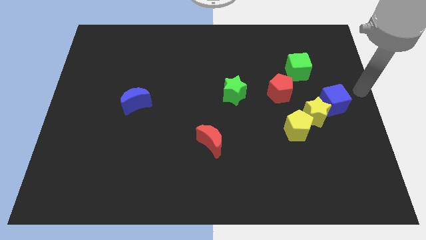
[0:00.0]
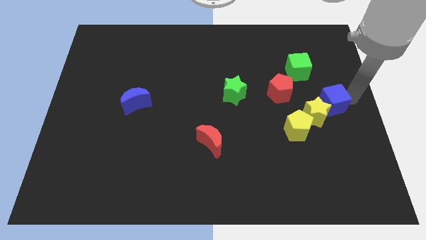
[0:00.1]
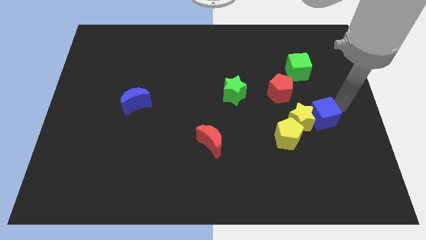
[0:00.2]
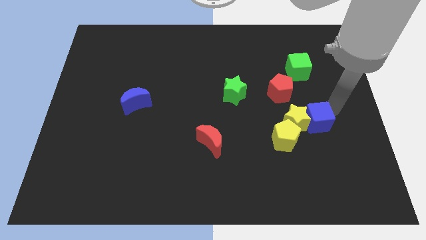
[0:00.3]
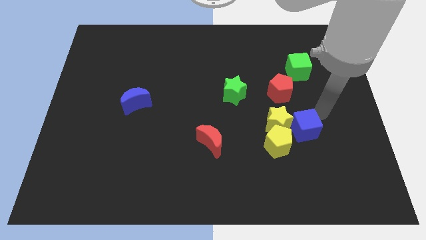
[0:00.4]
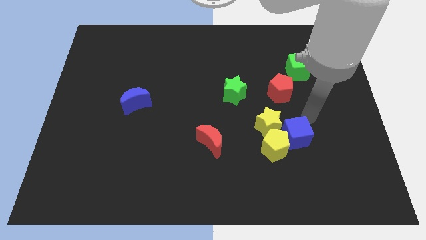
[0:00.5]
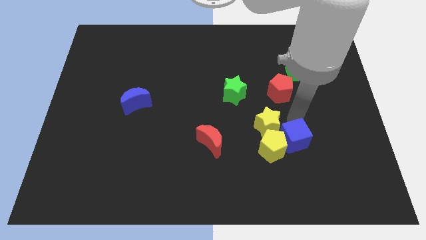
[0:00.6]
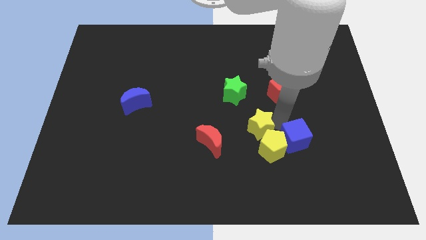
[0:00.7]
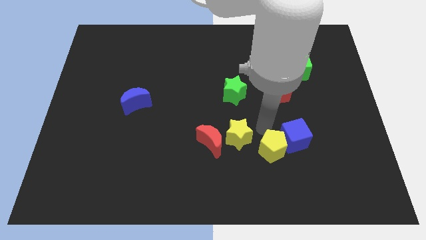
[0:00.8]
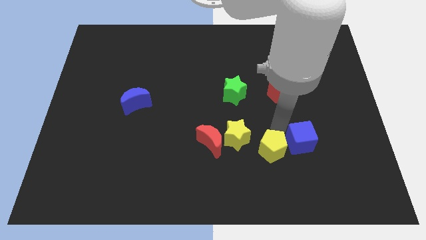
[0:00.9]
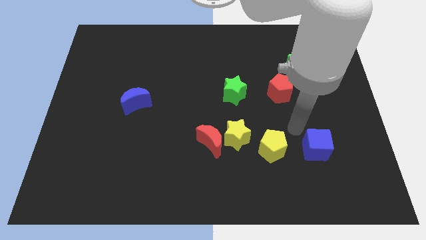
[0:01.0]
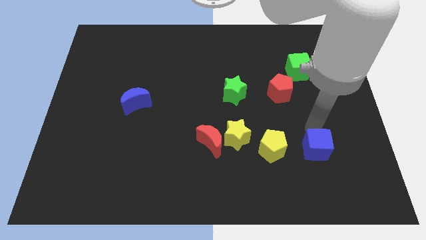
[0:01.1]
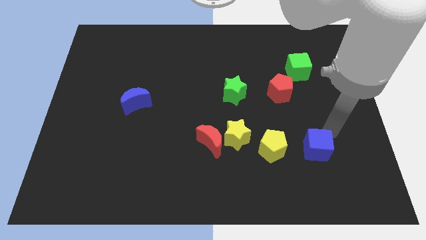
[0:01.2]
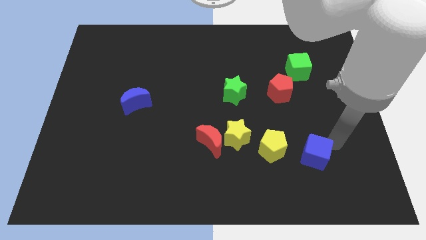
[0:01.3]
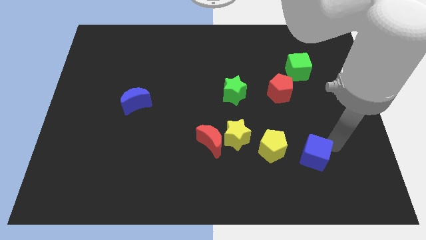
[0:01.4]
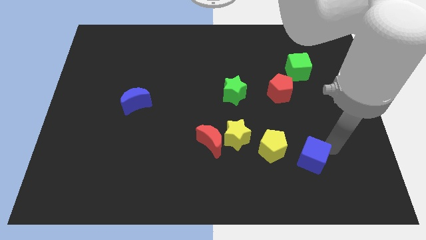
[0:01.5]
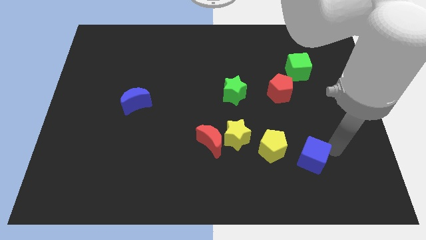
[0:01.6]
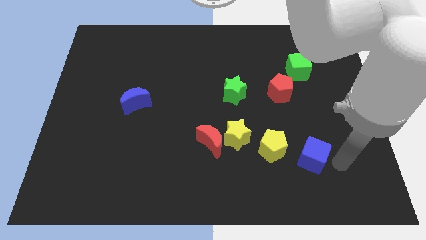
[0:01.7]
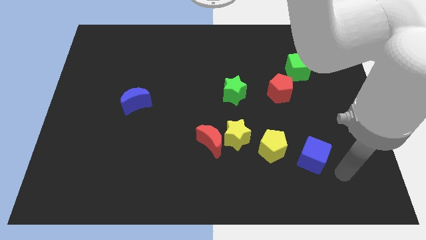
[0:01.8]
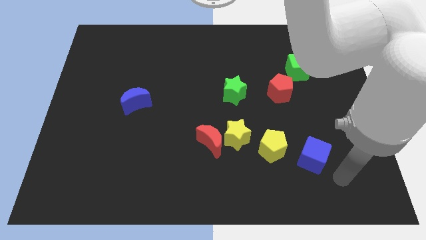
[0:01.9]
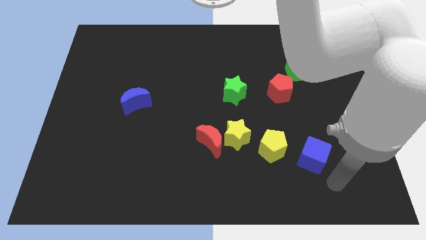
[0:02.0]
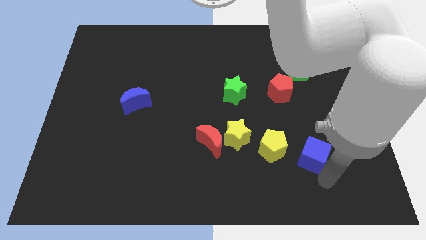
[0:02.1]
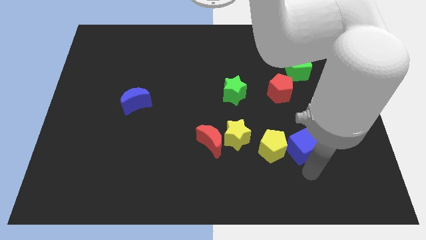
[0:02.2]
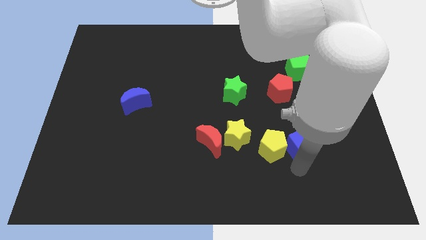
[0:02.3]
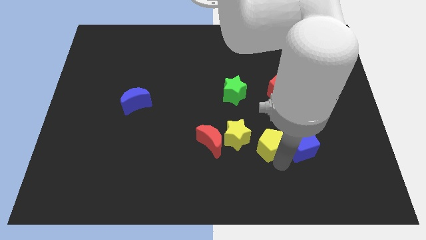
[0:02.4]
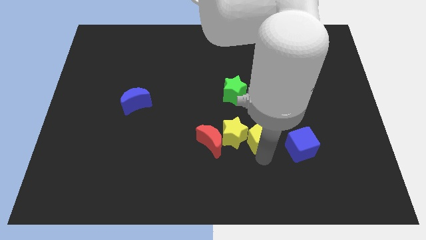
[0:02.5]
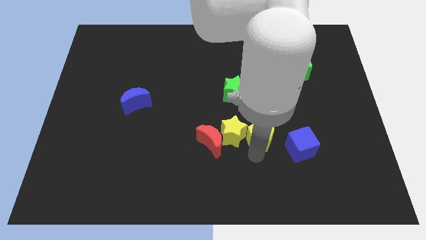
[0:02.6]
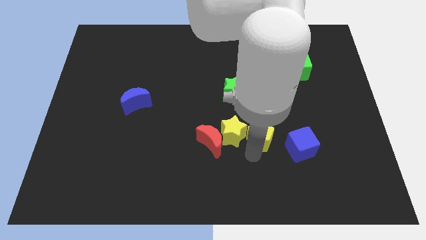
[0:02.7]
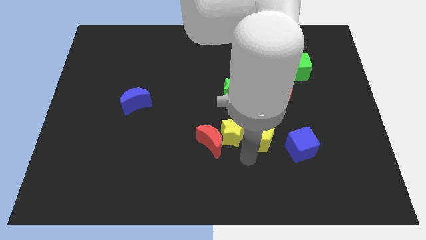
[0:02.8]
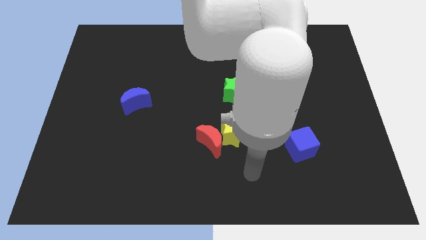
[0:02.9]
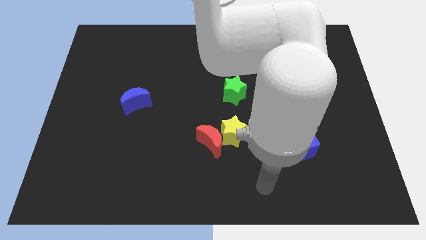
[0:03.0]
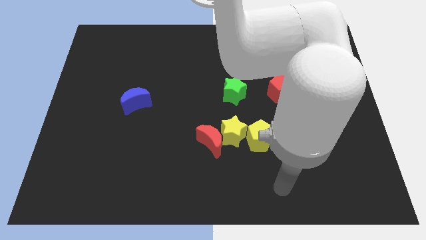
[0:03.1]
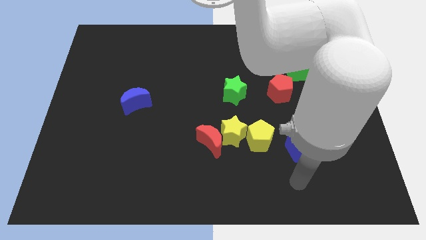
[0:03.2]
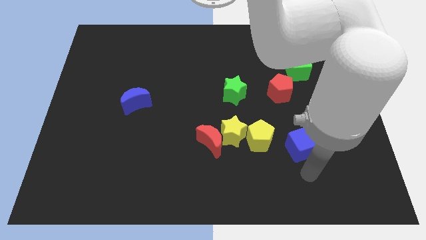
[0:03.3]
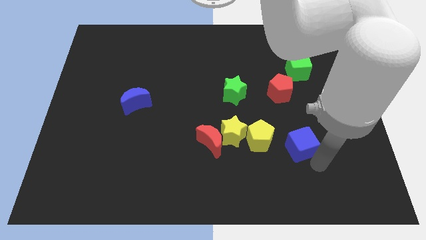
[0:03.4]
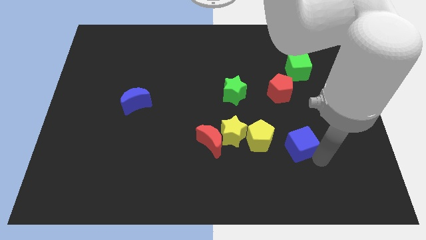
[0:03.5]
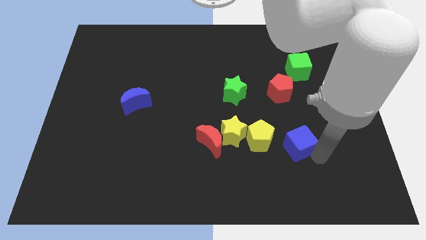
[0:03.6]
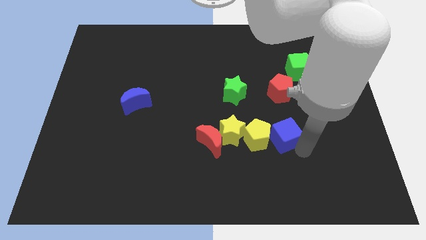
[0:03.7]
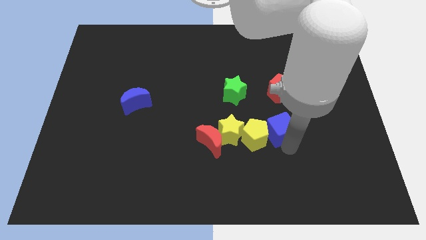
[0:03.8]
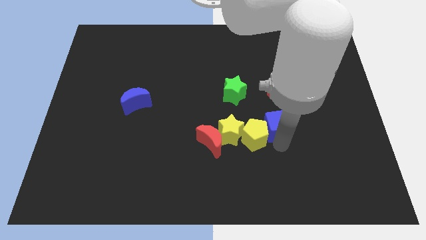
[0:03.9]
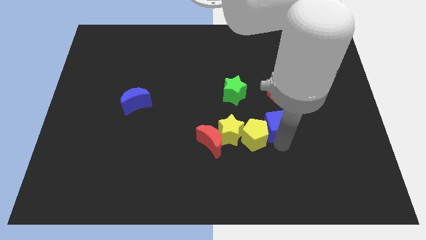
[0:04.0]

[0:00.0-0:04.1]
push the yellow star in between the yellow pentagon and the red moon

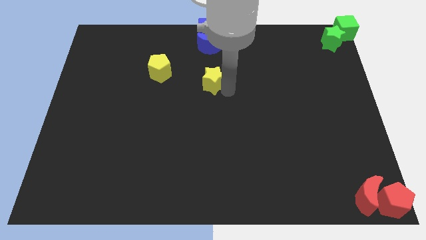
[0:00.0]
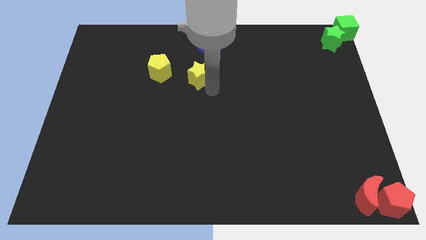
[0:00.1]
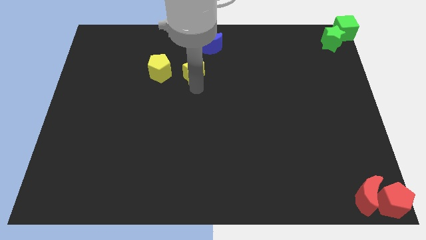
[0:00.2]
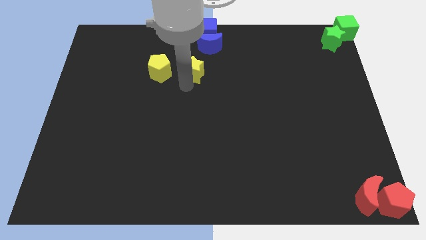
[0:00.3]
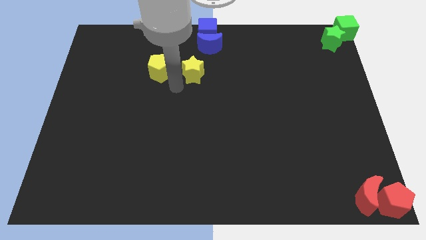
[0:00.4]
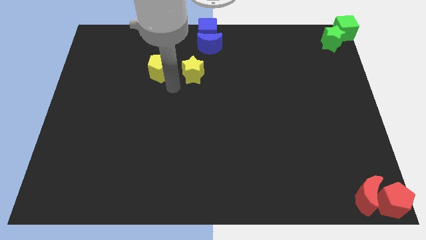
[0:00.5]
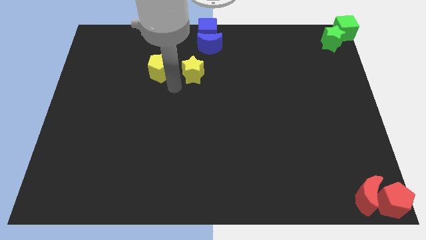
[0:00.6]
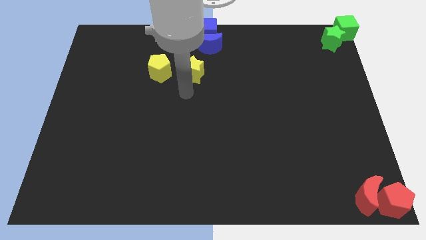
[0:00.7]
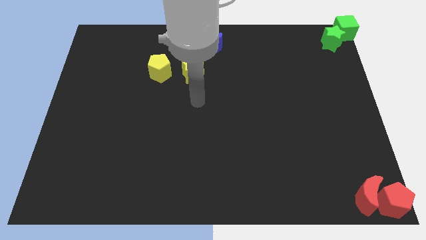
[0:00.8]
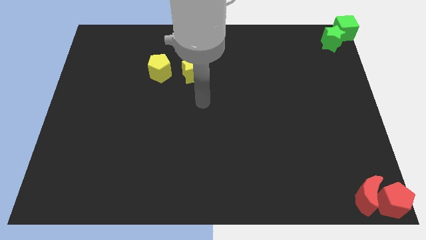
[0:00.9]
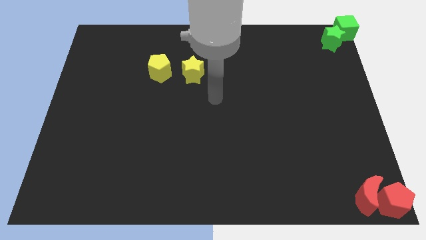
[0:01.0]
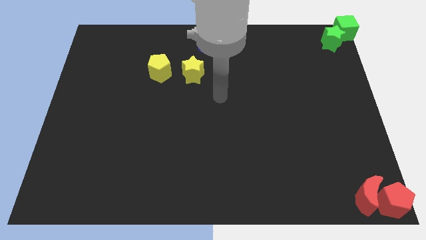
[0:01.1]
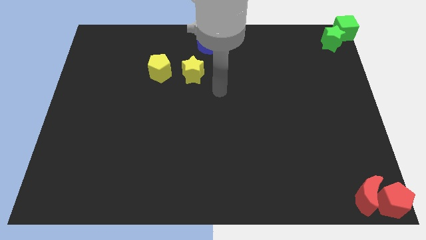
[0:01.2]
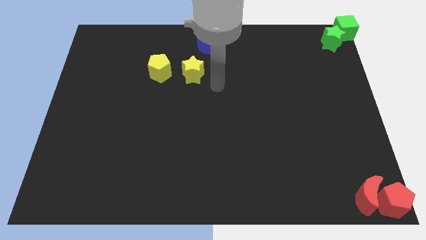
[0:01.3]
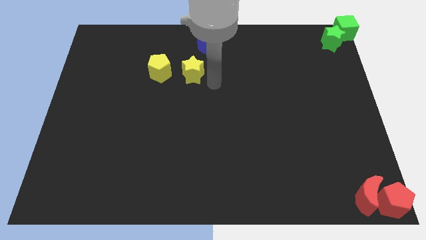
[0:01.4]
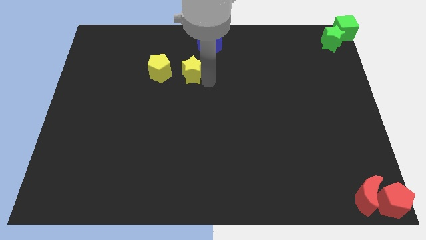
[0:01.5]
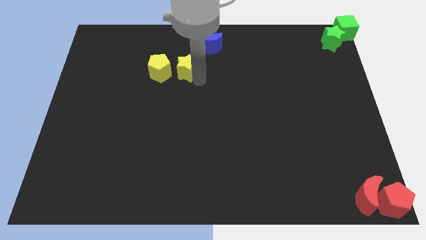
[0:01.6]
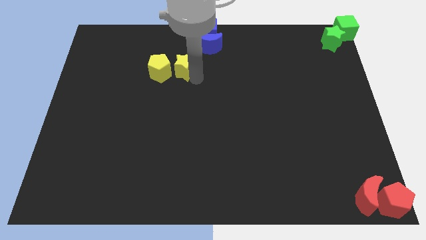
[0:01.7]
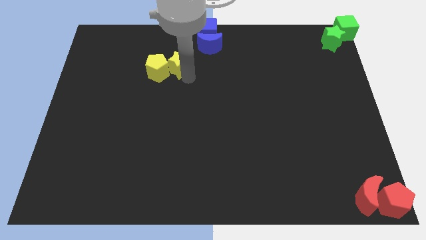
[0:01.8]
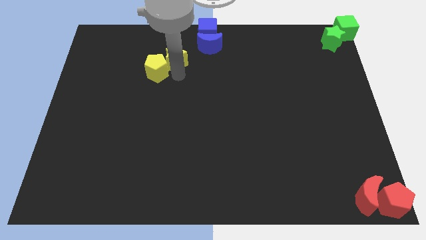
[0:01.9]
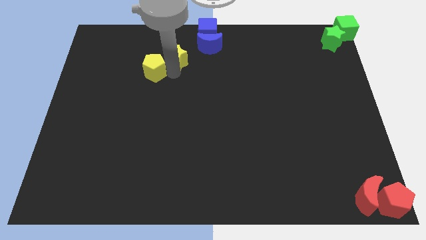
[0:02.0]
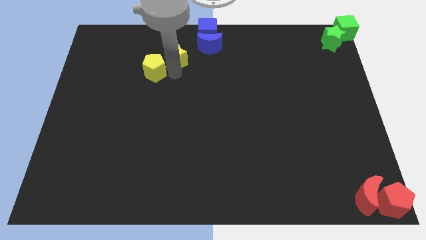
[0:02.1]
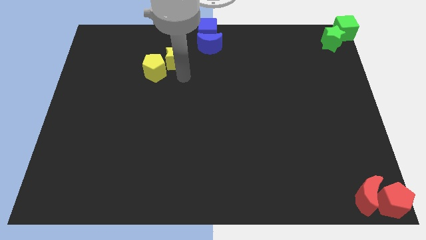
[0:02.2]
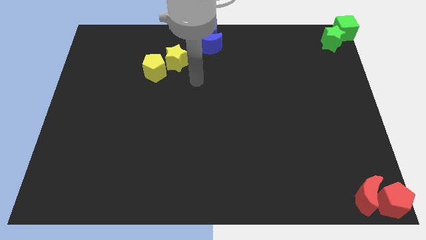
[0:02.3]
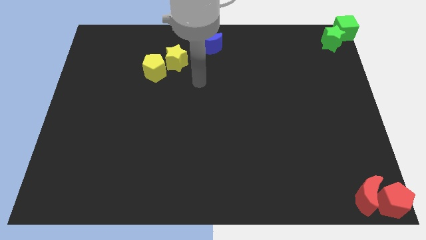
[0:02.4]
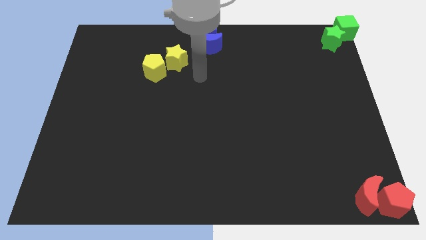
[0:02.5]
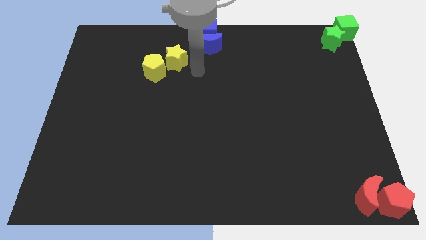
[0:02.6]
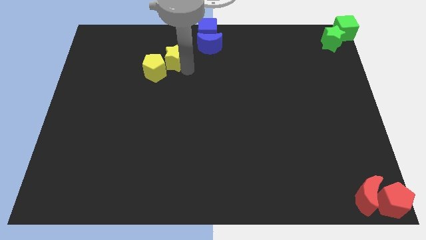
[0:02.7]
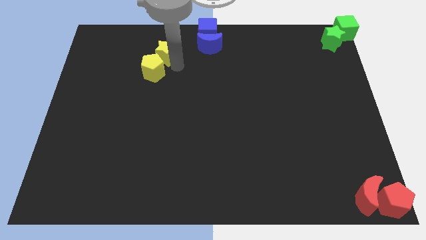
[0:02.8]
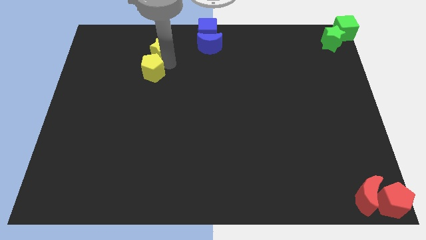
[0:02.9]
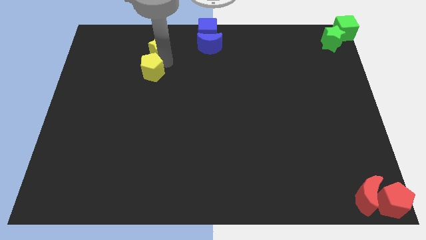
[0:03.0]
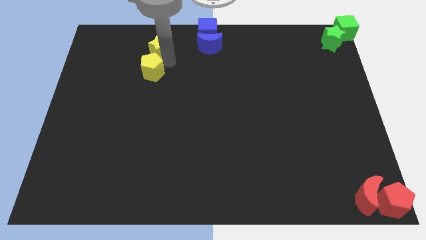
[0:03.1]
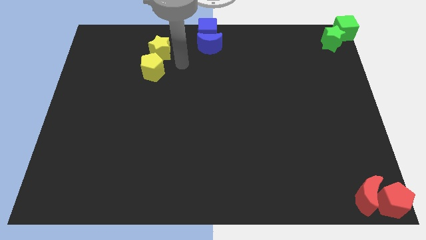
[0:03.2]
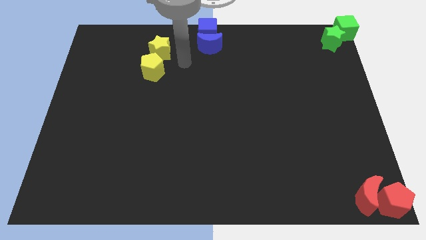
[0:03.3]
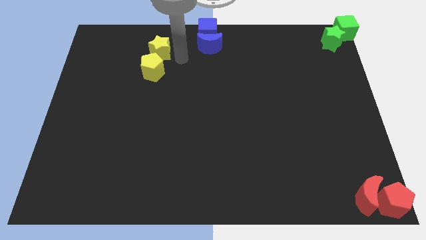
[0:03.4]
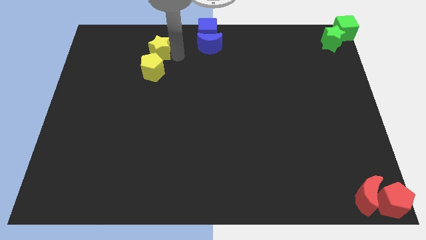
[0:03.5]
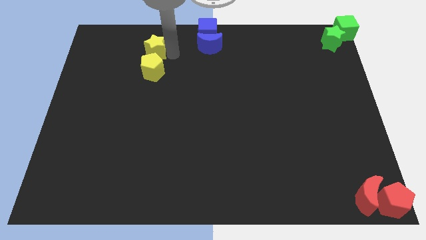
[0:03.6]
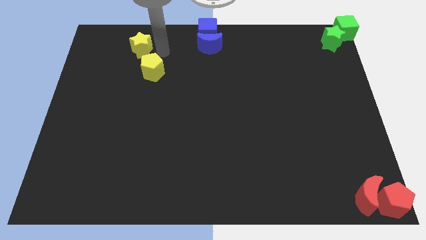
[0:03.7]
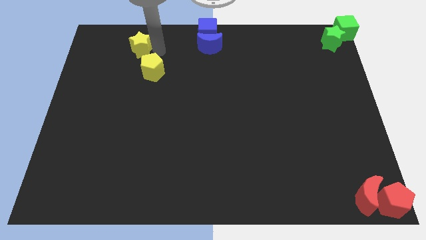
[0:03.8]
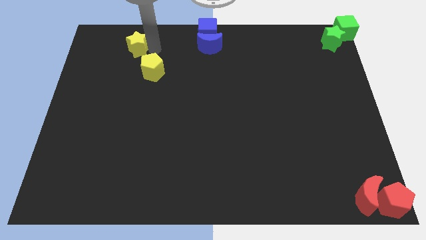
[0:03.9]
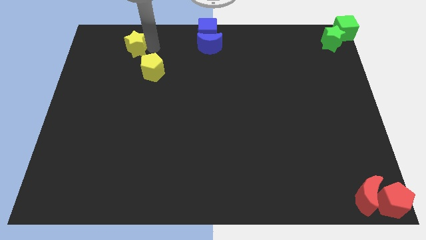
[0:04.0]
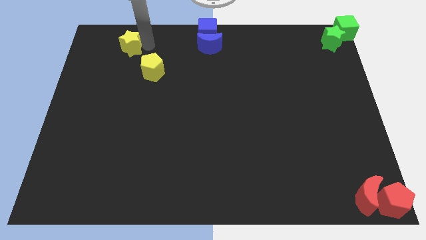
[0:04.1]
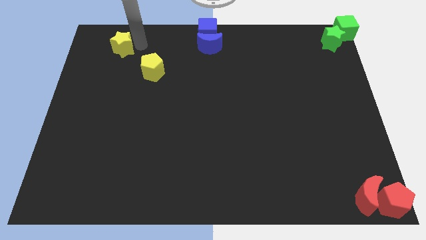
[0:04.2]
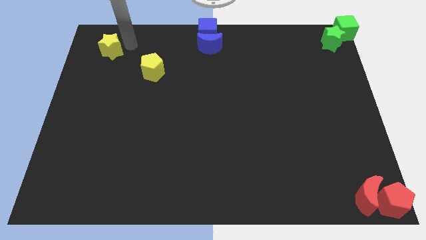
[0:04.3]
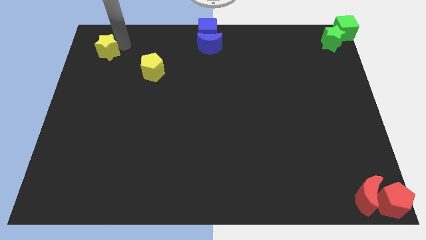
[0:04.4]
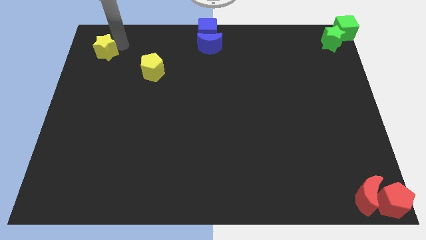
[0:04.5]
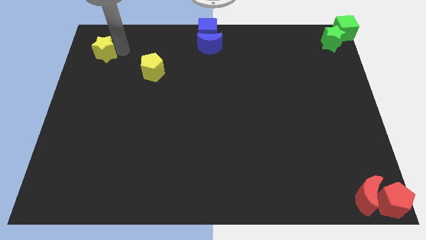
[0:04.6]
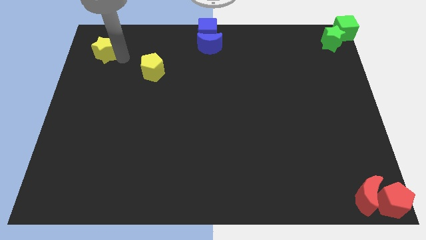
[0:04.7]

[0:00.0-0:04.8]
push the yellow star to the top left corner to the board

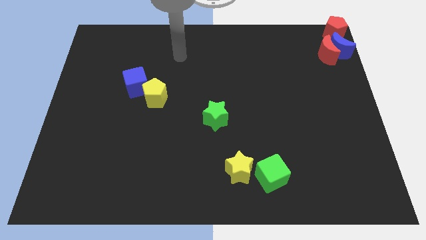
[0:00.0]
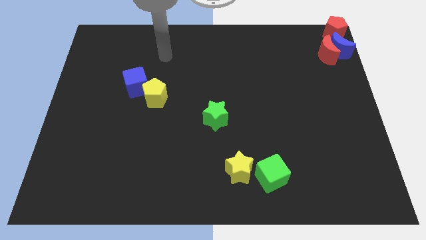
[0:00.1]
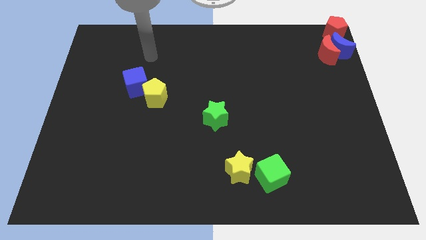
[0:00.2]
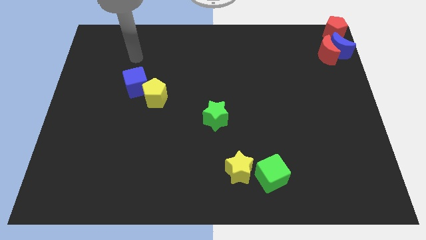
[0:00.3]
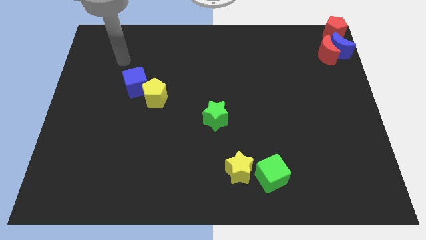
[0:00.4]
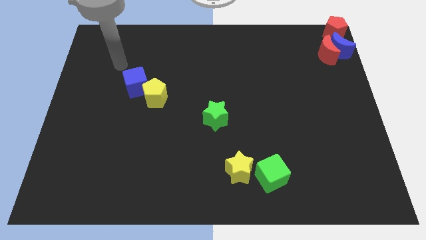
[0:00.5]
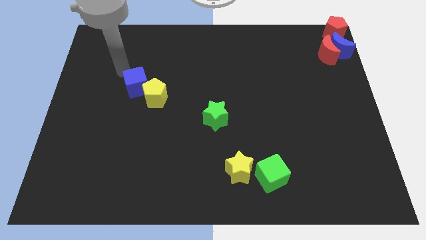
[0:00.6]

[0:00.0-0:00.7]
move your arm above the blue cube
